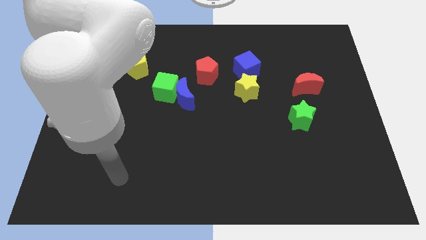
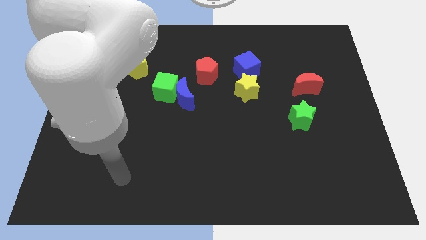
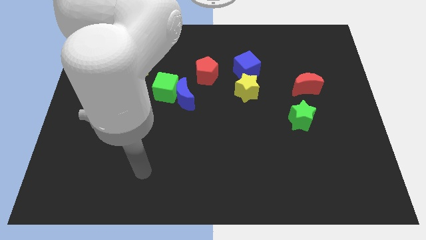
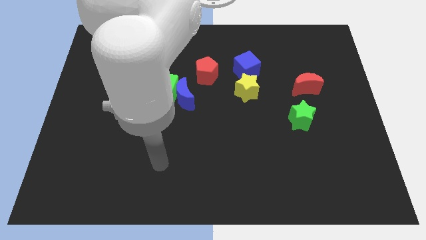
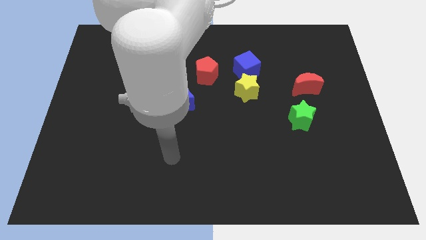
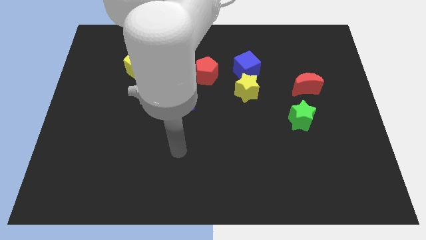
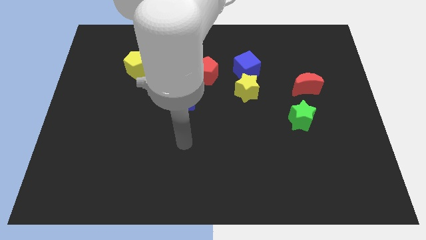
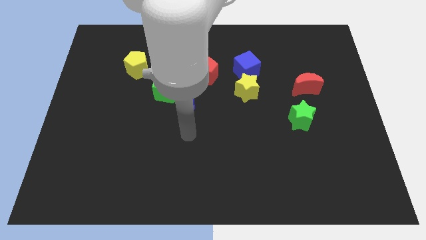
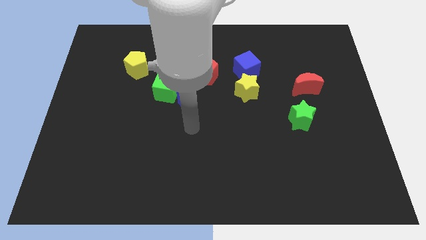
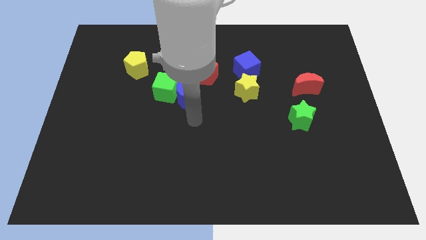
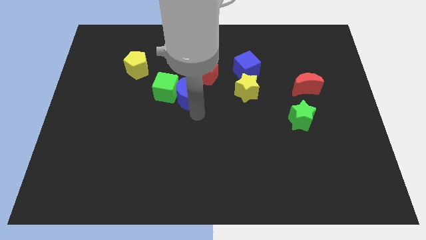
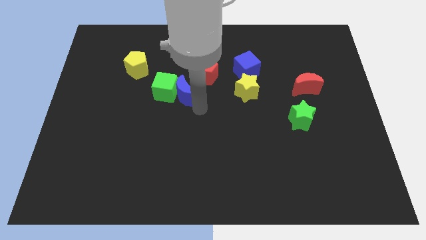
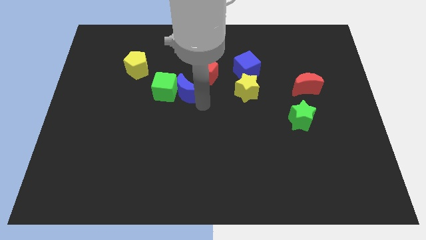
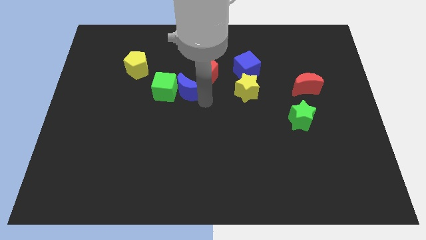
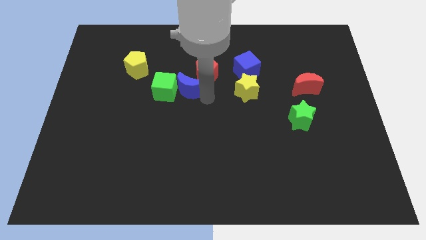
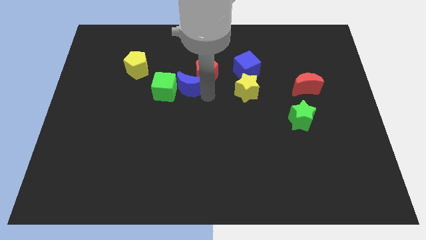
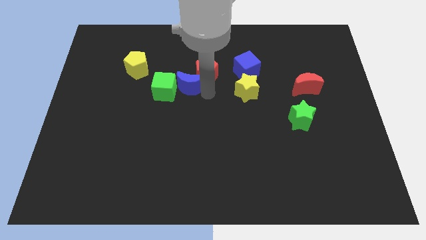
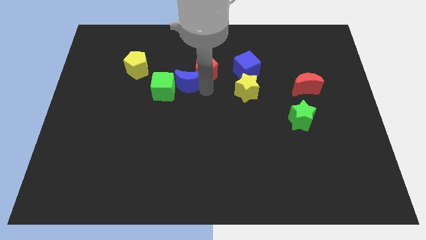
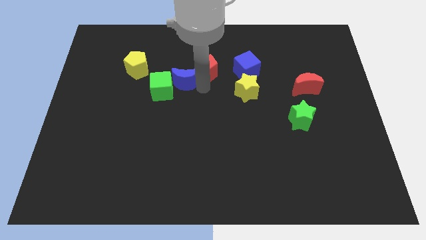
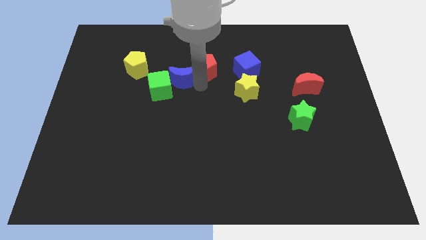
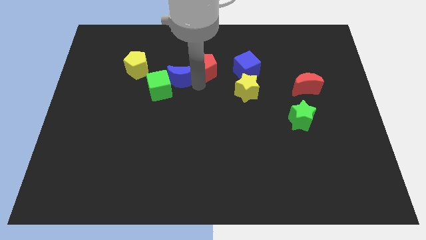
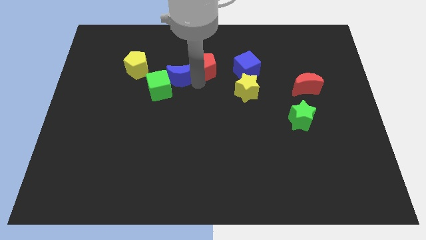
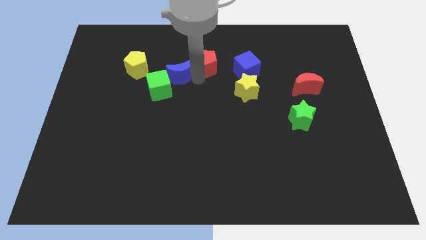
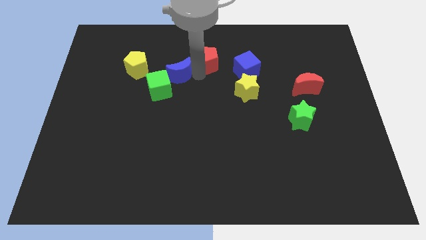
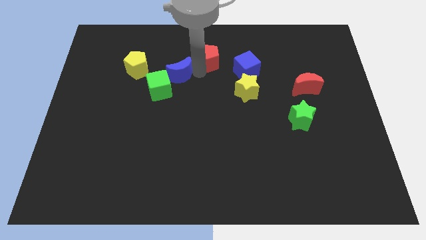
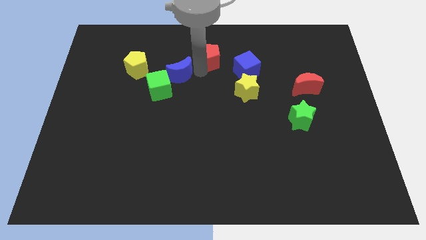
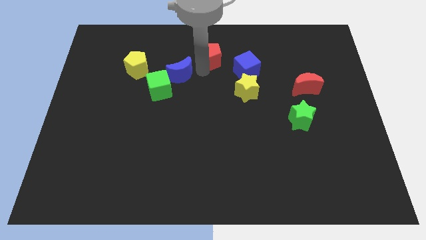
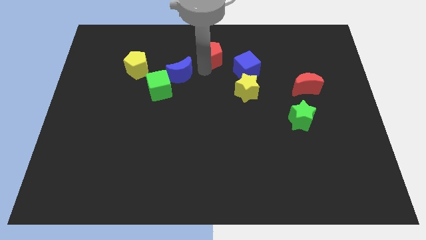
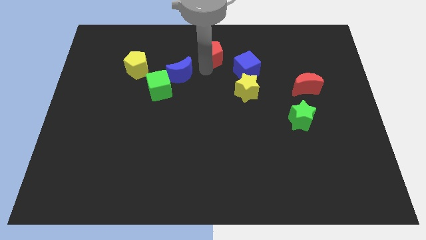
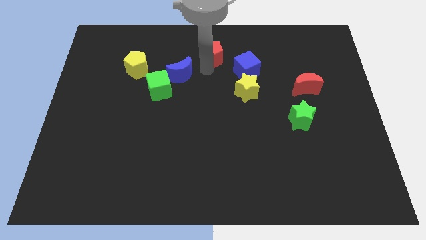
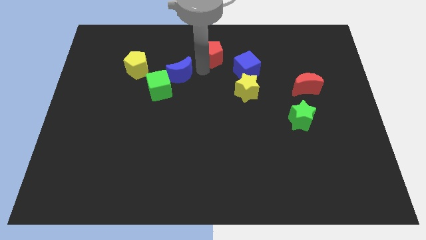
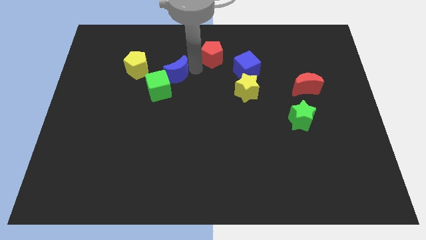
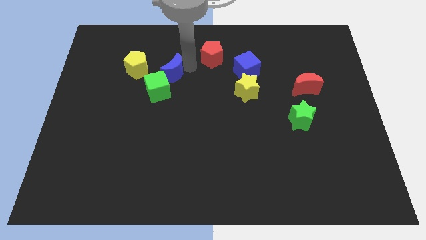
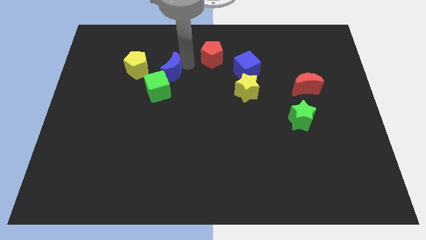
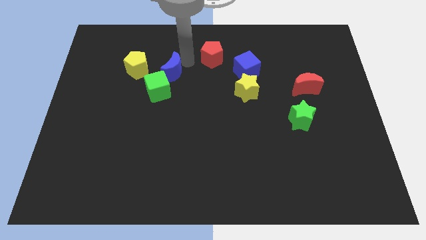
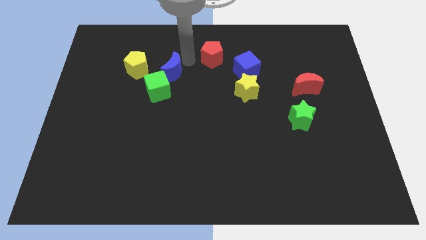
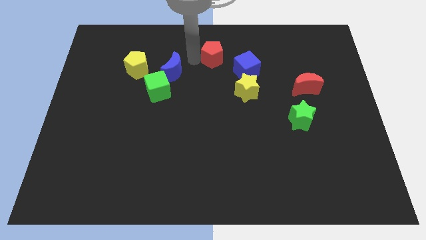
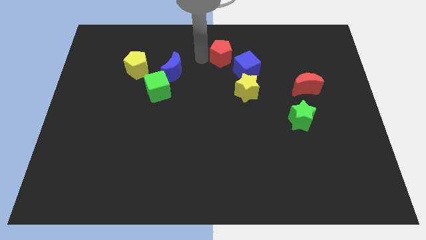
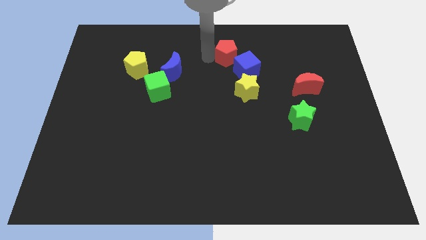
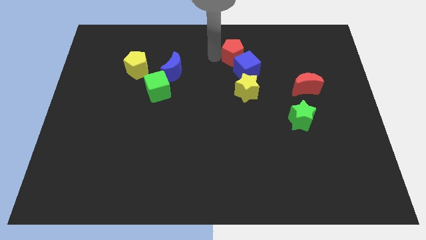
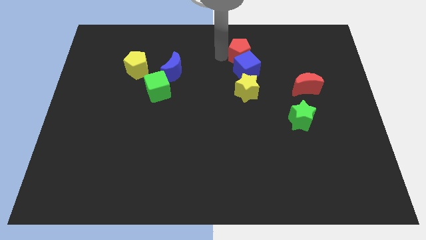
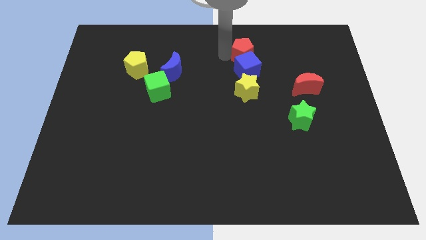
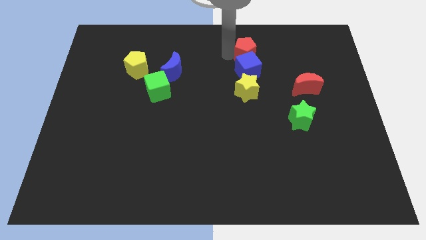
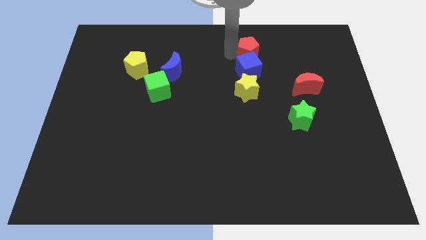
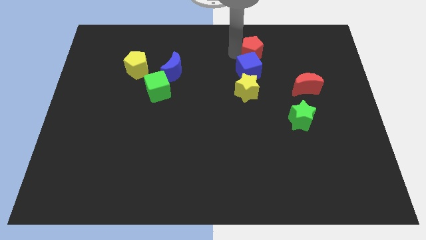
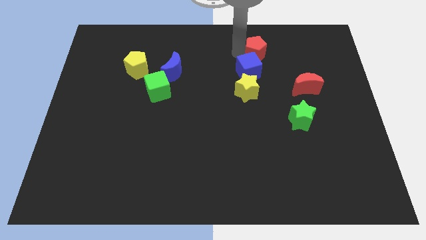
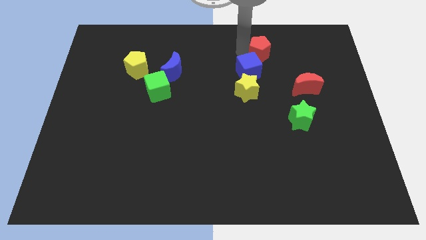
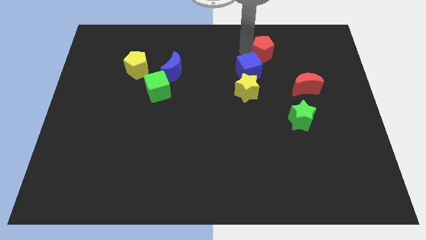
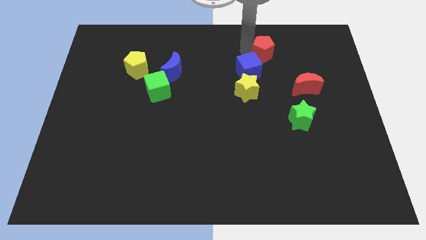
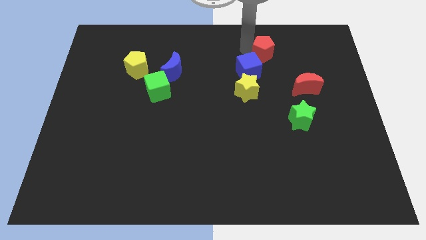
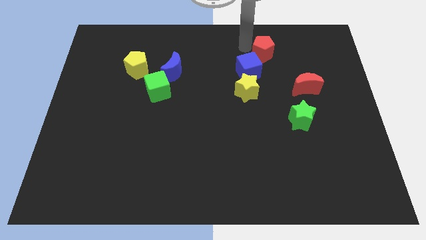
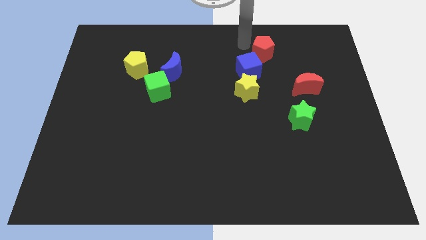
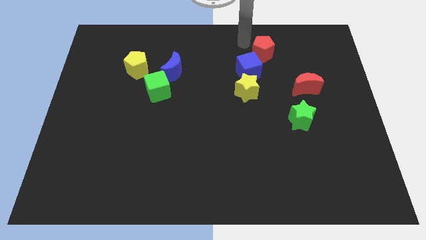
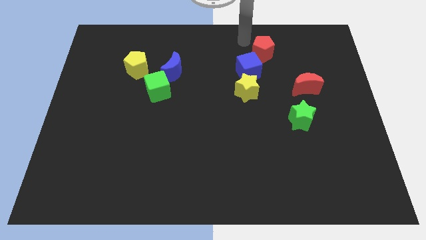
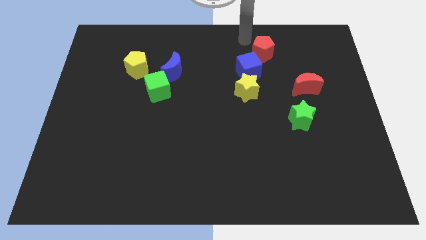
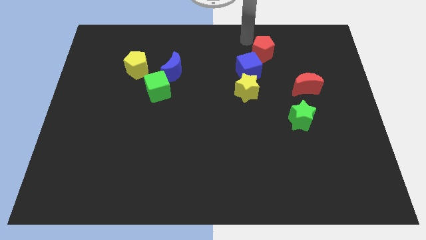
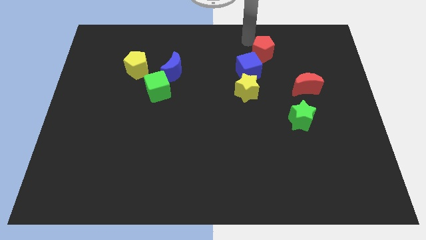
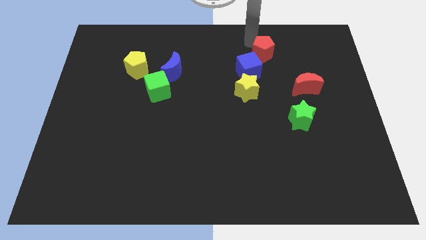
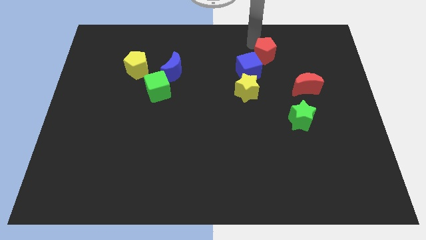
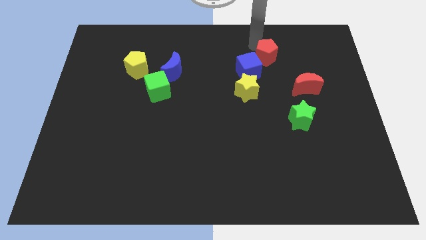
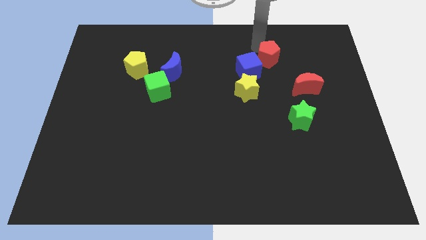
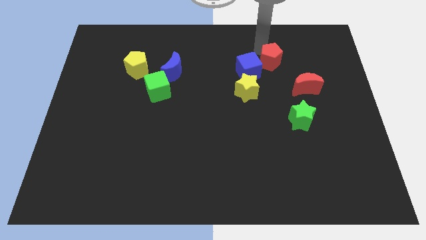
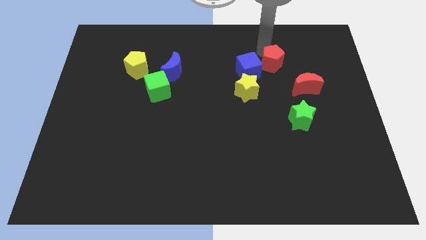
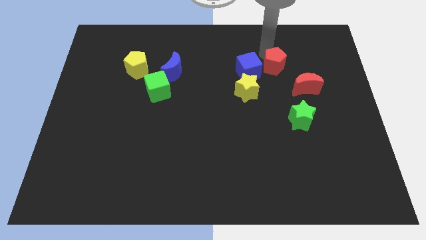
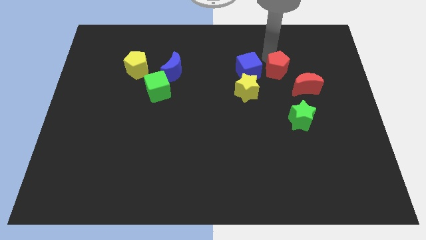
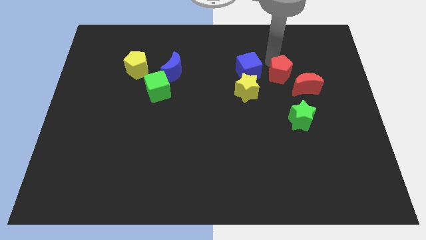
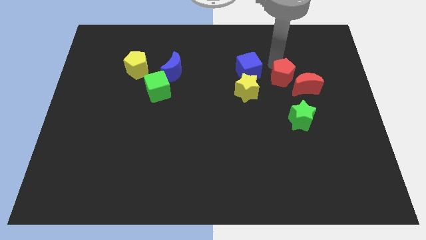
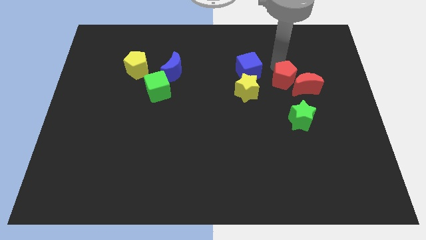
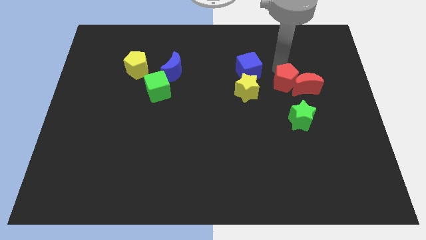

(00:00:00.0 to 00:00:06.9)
put the red pentagon close to the red moon

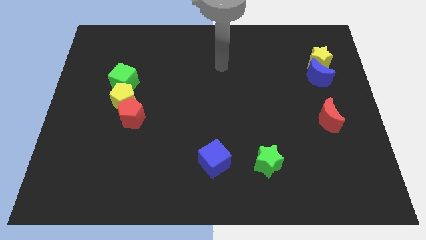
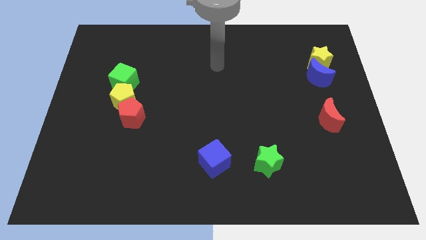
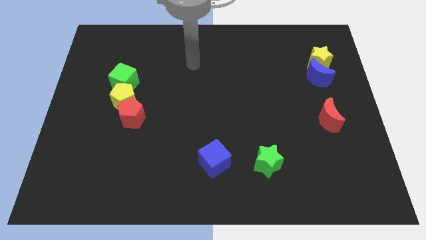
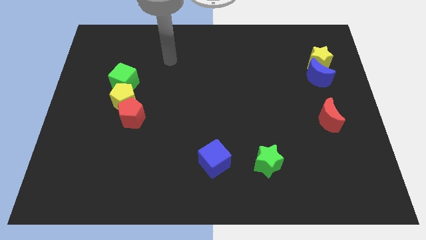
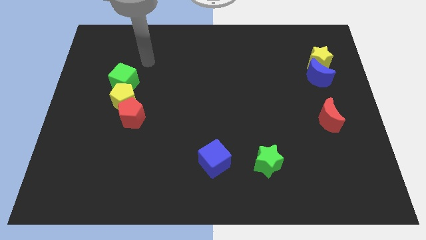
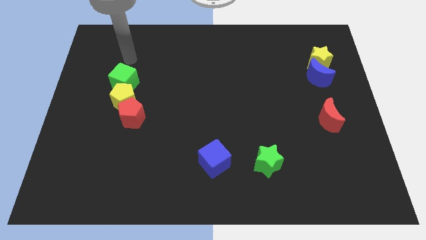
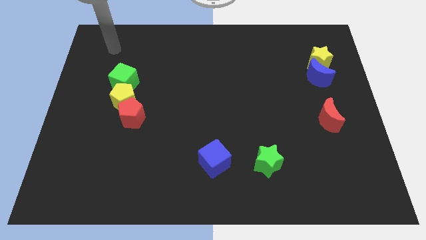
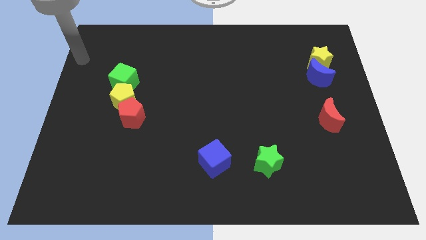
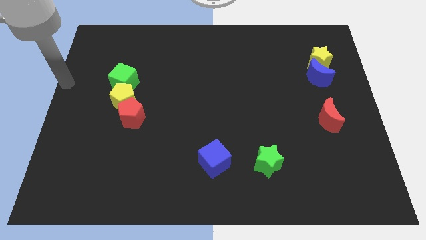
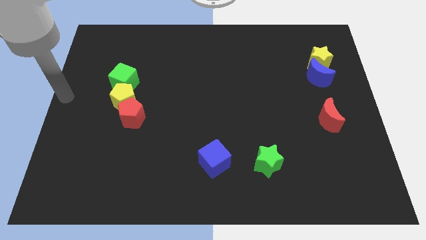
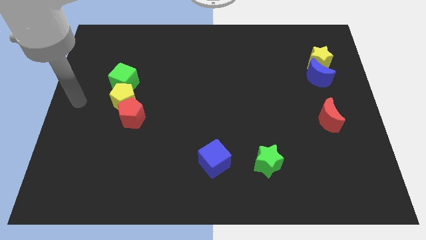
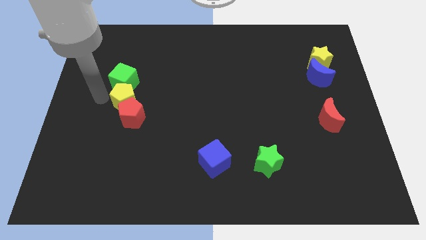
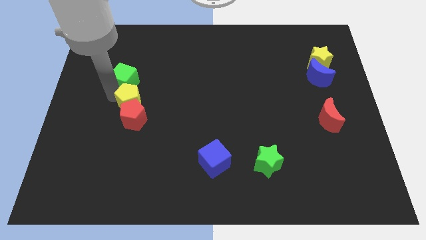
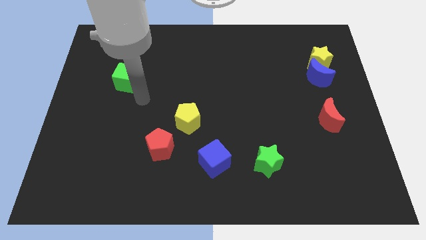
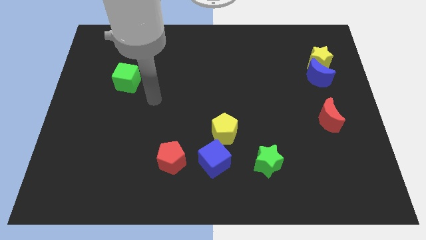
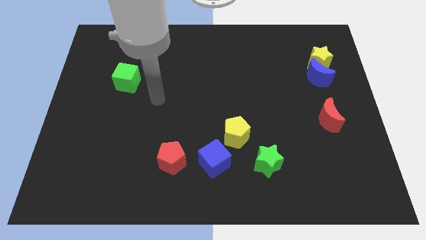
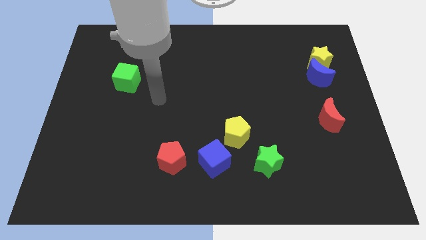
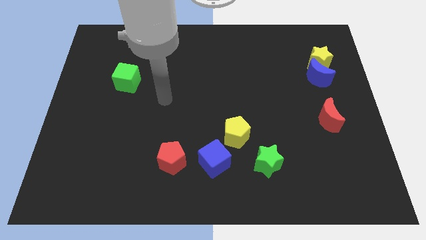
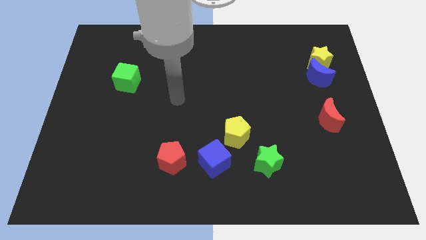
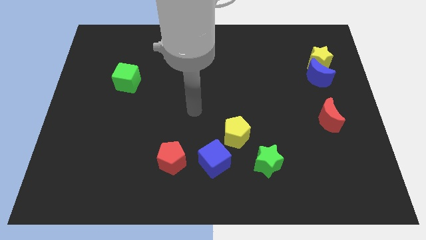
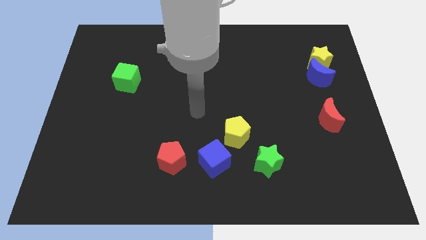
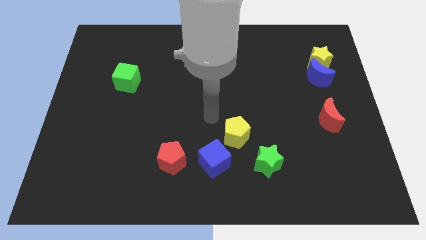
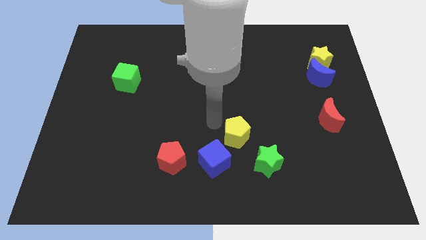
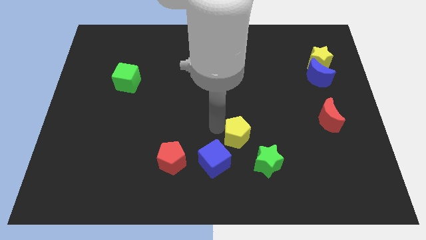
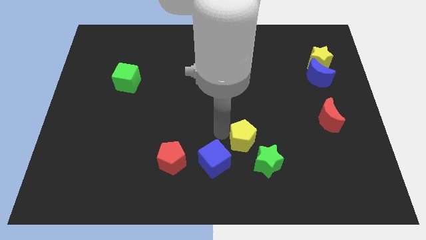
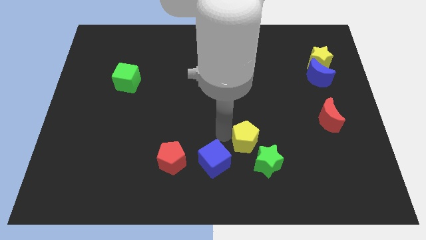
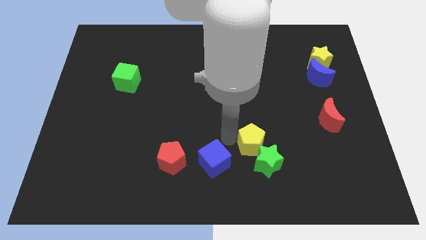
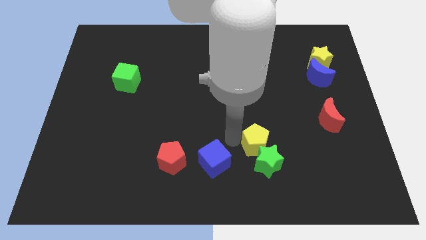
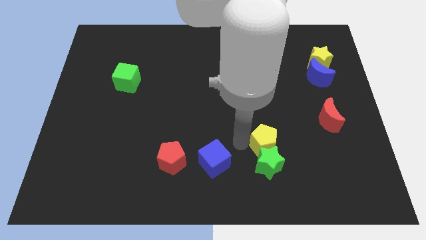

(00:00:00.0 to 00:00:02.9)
slide the yellow pentagon towards the green star
